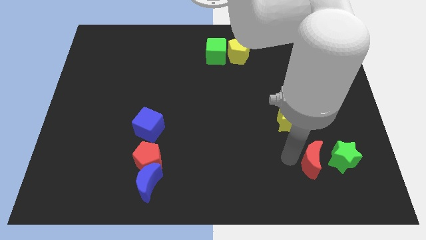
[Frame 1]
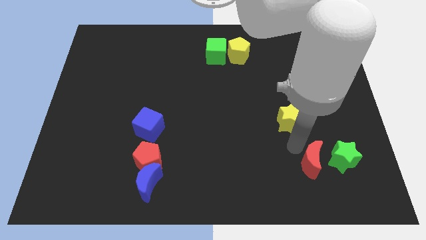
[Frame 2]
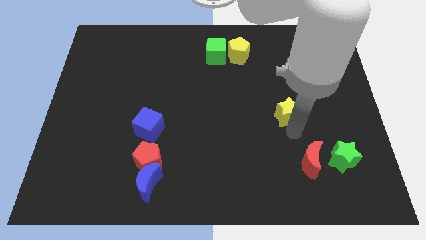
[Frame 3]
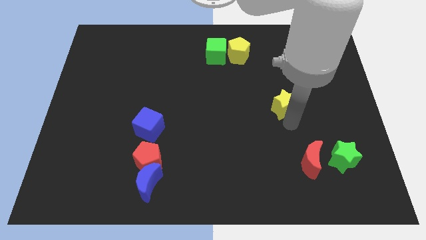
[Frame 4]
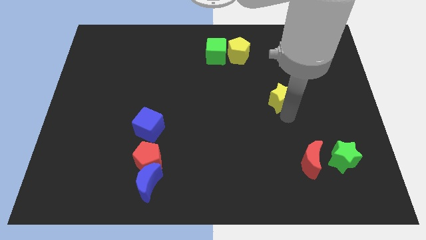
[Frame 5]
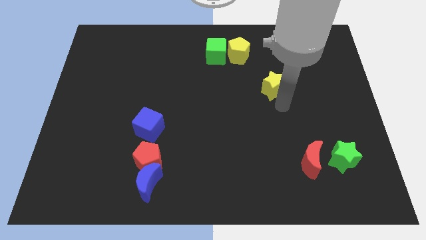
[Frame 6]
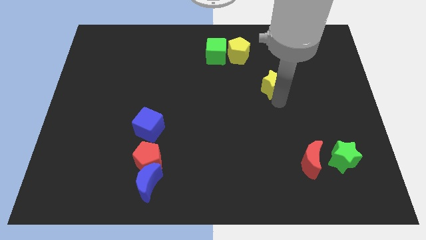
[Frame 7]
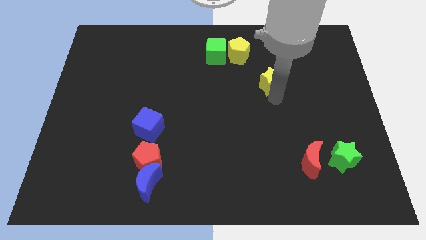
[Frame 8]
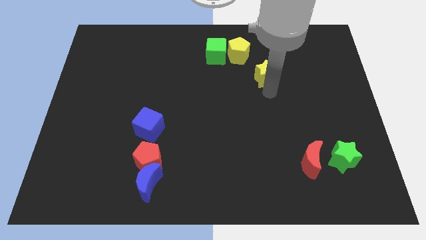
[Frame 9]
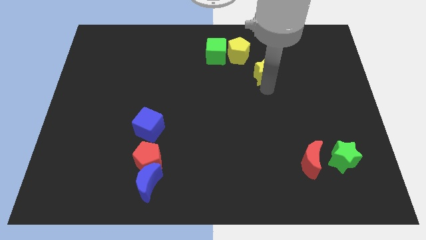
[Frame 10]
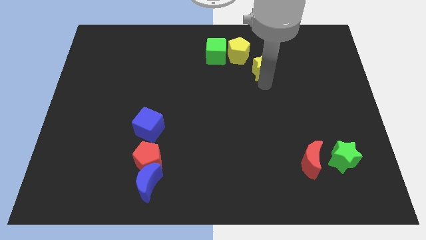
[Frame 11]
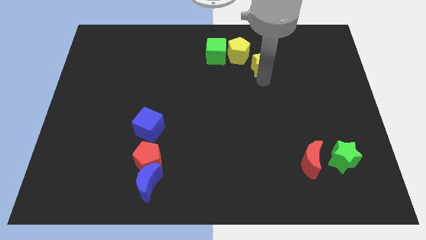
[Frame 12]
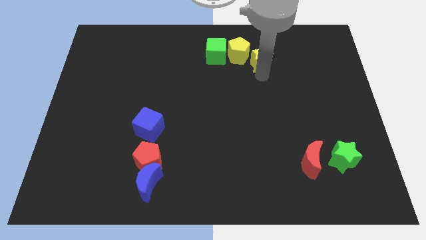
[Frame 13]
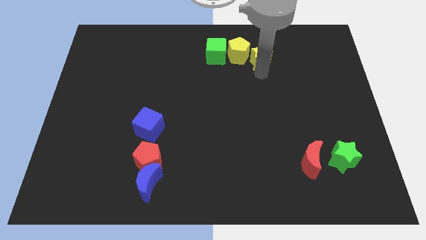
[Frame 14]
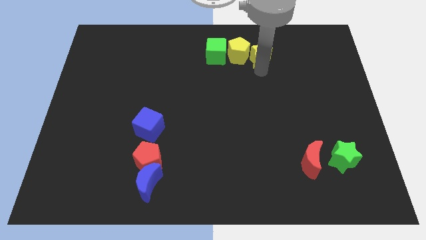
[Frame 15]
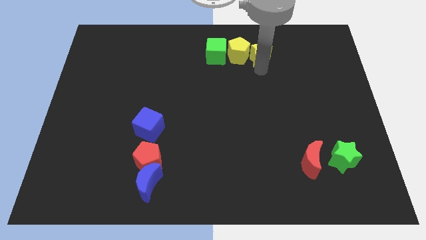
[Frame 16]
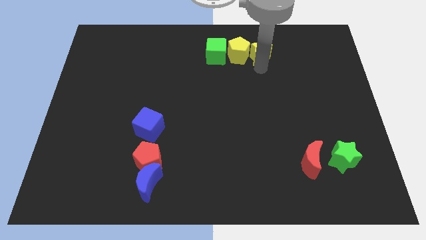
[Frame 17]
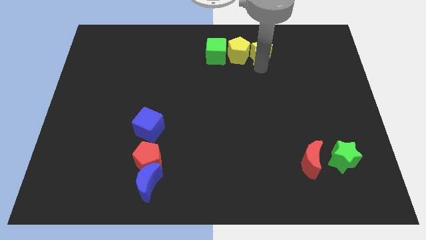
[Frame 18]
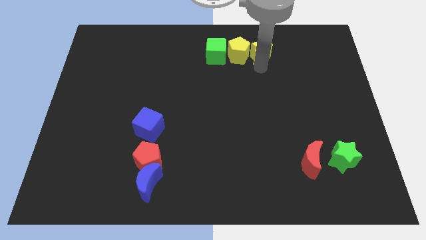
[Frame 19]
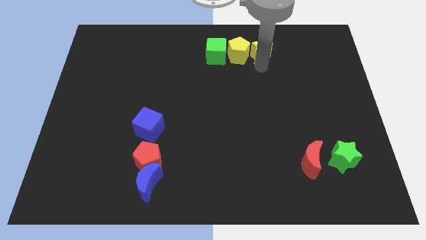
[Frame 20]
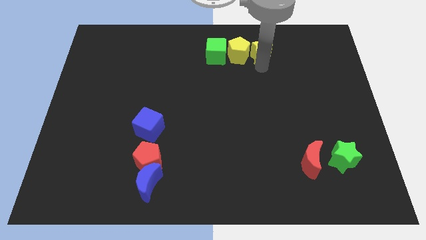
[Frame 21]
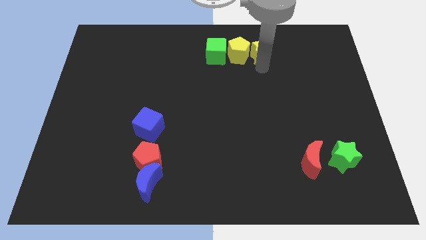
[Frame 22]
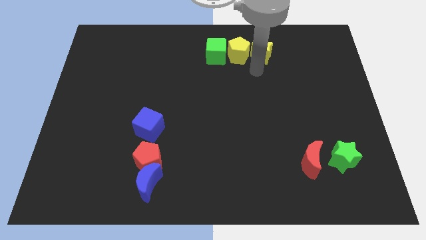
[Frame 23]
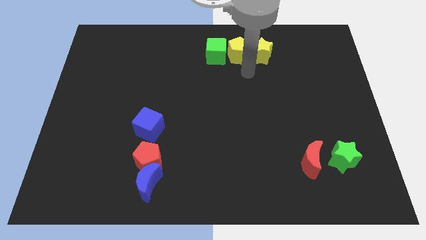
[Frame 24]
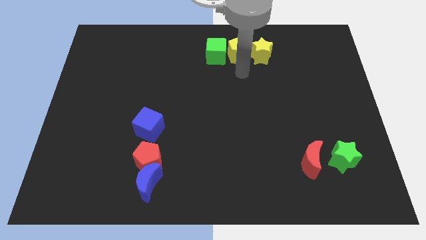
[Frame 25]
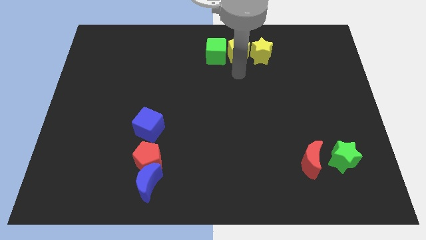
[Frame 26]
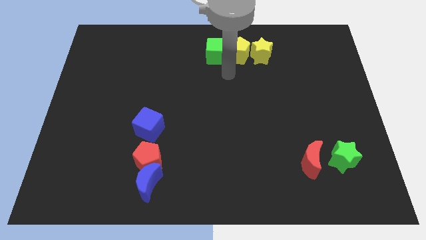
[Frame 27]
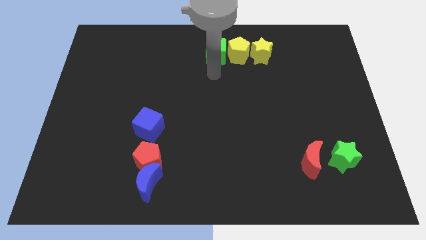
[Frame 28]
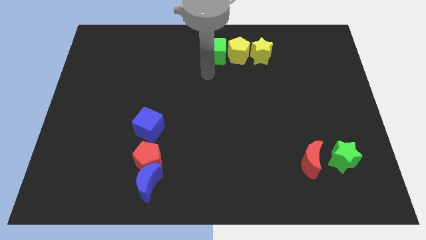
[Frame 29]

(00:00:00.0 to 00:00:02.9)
move yellow star right of the yellow pentagon

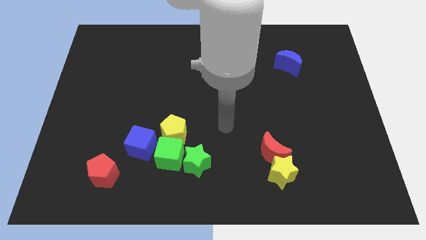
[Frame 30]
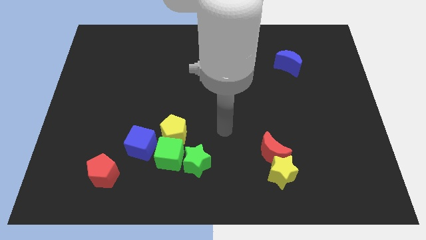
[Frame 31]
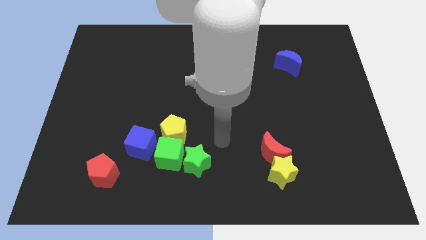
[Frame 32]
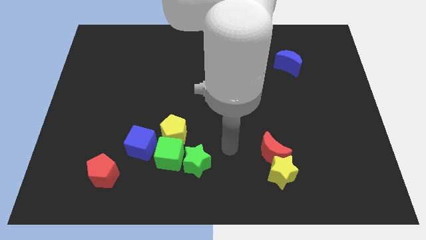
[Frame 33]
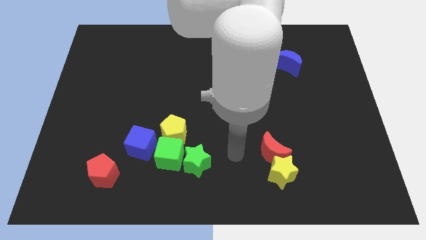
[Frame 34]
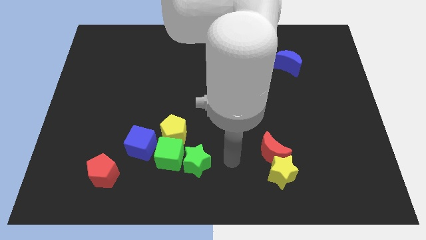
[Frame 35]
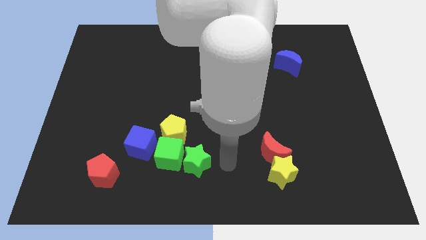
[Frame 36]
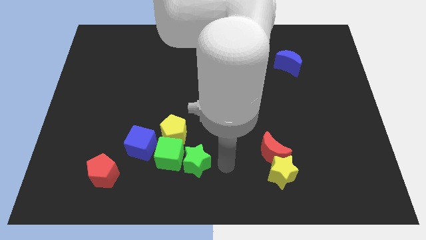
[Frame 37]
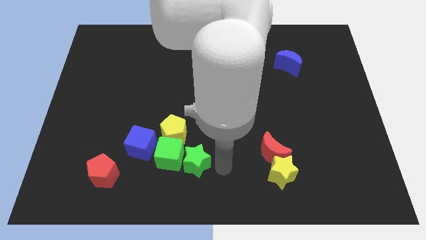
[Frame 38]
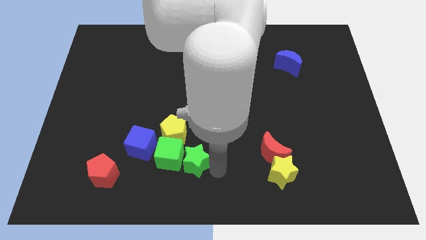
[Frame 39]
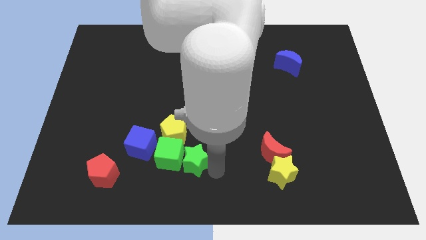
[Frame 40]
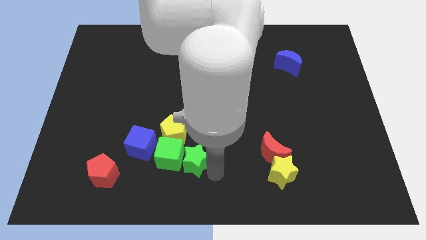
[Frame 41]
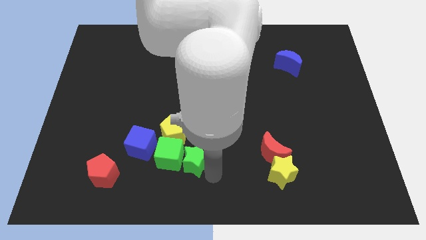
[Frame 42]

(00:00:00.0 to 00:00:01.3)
touch the green star

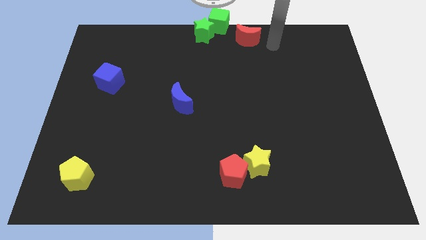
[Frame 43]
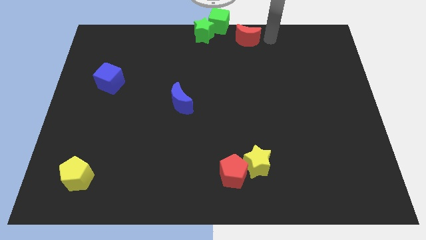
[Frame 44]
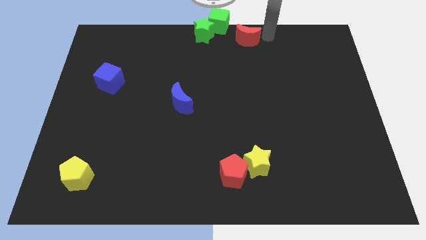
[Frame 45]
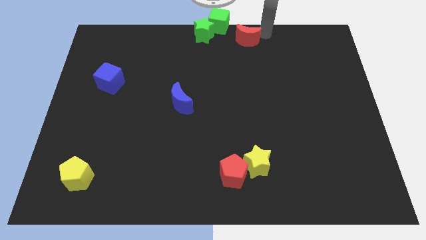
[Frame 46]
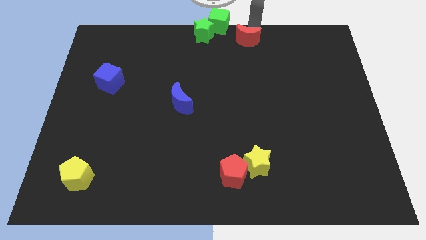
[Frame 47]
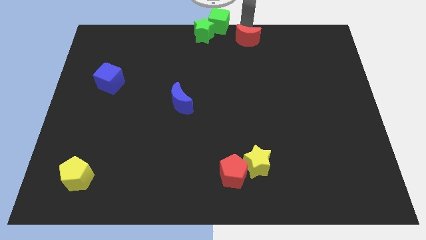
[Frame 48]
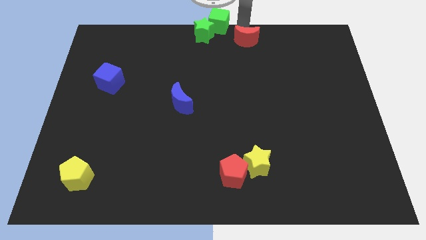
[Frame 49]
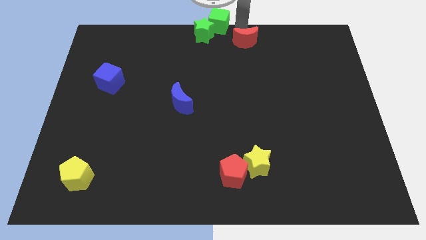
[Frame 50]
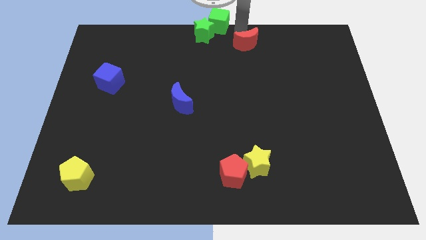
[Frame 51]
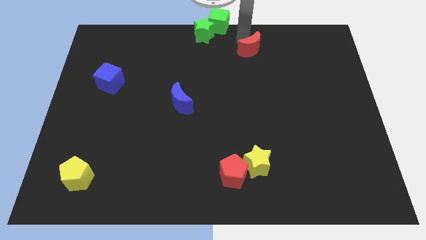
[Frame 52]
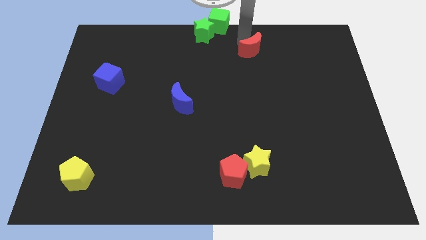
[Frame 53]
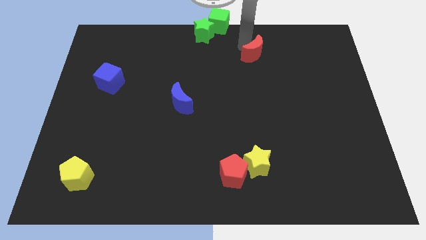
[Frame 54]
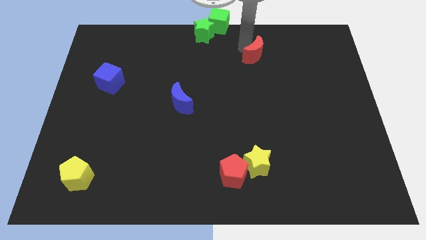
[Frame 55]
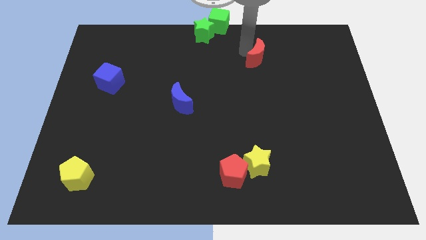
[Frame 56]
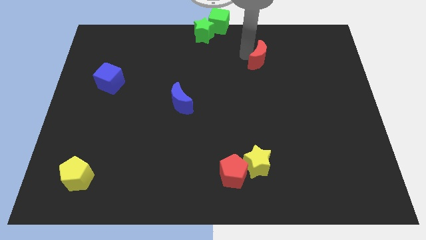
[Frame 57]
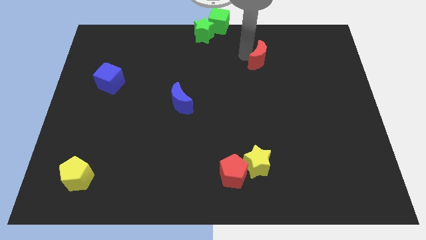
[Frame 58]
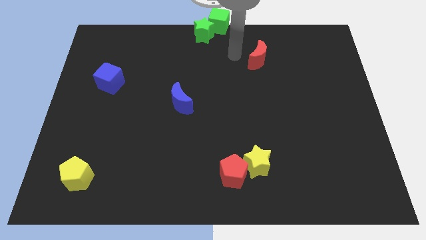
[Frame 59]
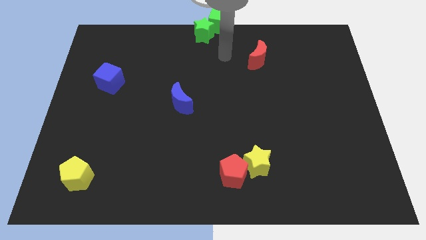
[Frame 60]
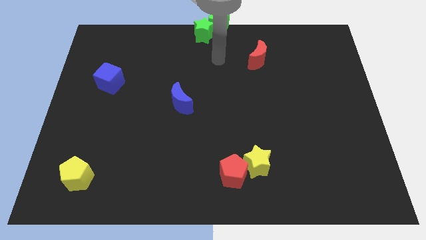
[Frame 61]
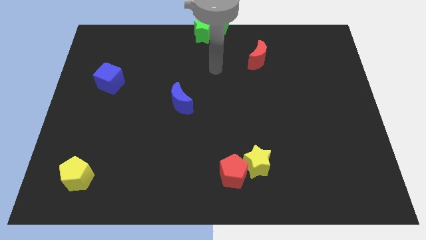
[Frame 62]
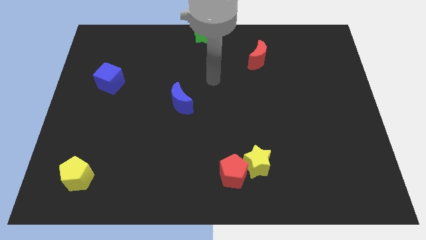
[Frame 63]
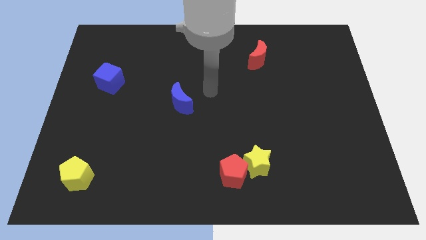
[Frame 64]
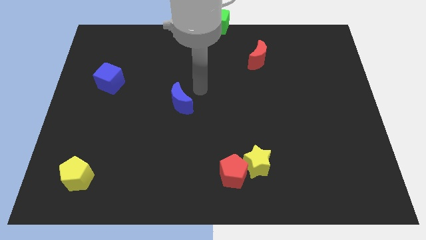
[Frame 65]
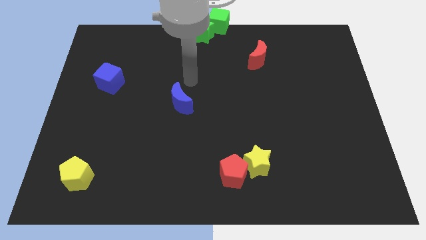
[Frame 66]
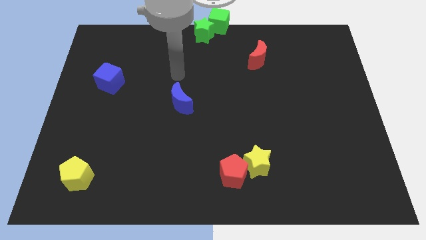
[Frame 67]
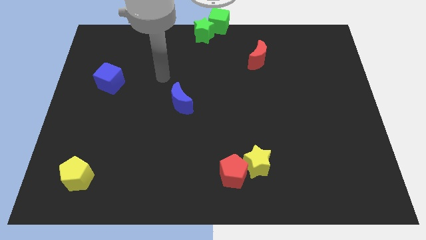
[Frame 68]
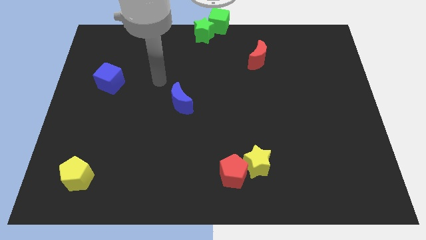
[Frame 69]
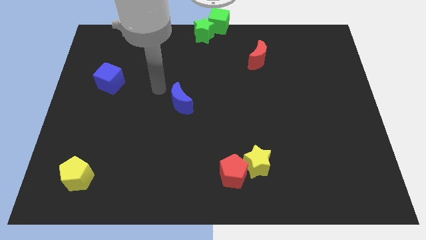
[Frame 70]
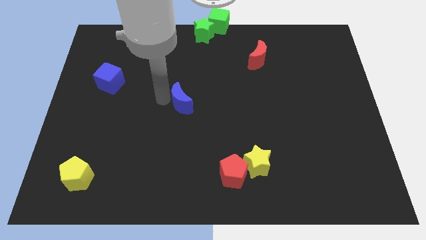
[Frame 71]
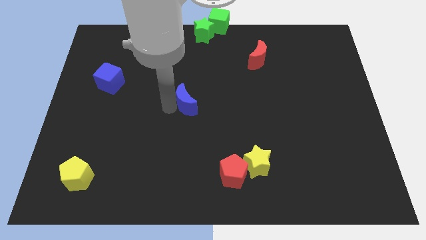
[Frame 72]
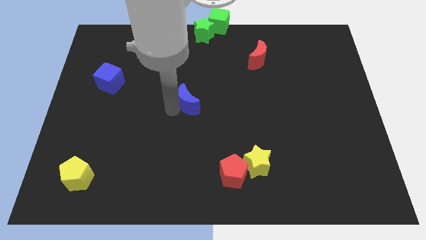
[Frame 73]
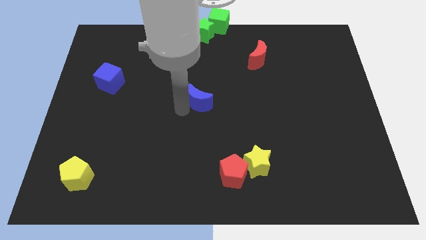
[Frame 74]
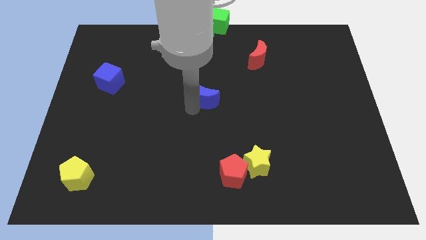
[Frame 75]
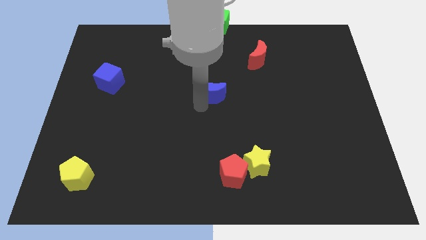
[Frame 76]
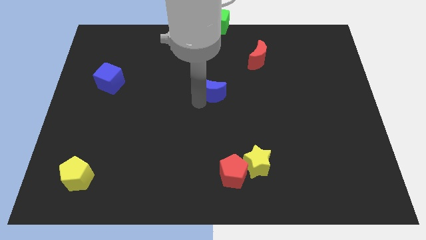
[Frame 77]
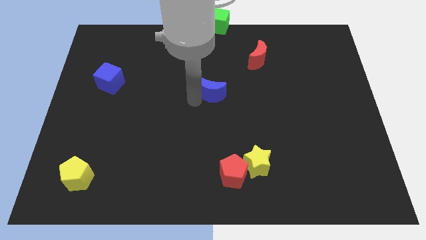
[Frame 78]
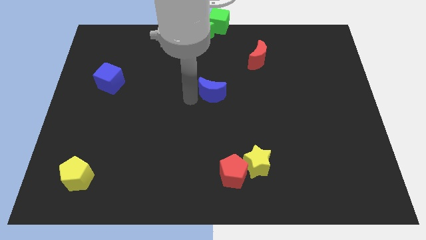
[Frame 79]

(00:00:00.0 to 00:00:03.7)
place the blue moon at the center of the board

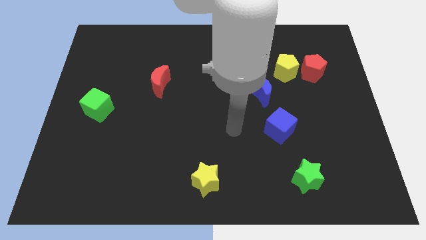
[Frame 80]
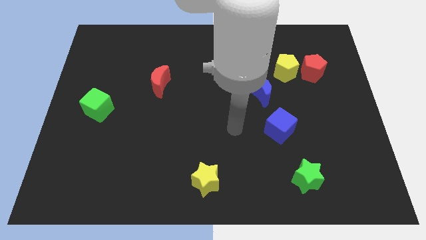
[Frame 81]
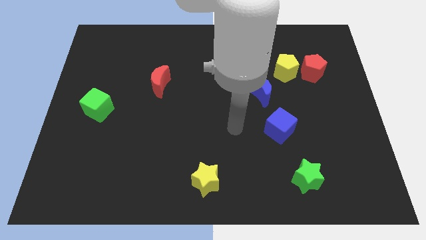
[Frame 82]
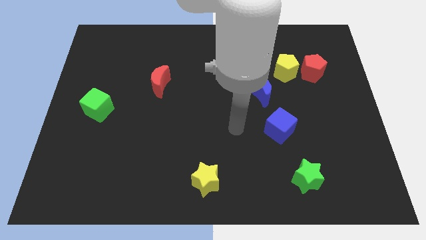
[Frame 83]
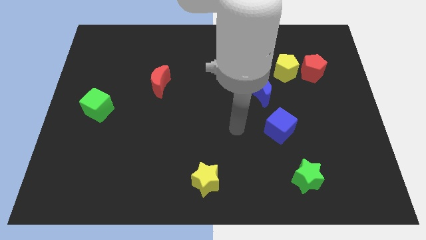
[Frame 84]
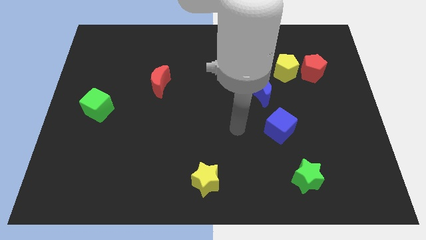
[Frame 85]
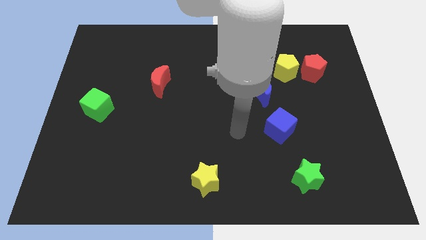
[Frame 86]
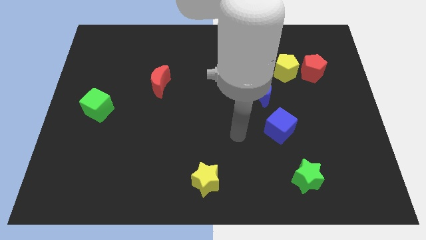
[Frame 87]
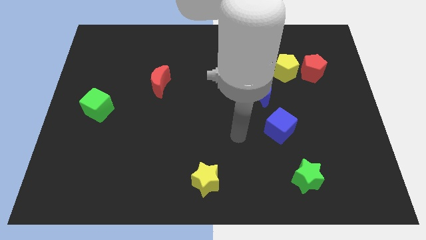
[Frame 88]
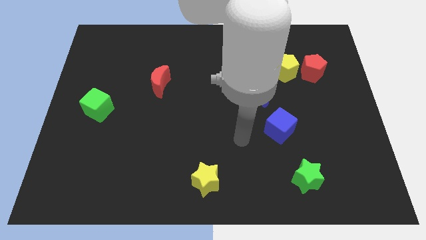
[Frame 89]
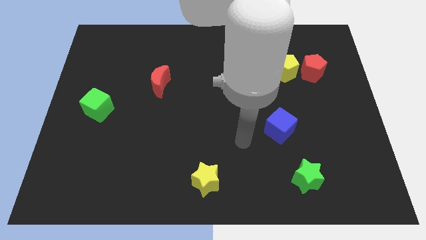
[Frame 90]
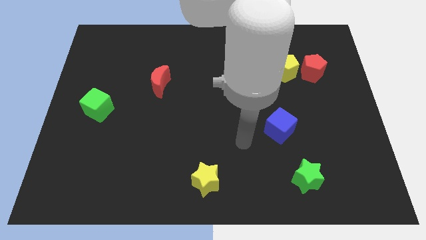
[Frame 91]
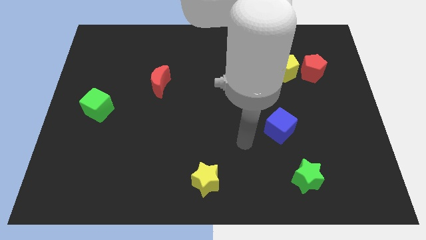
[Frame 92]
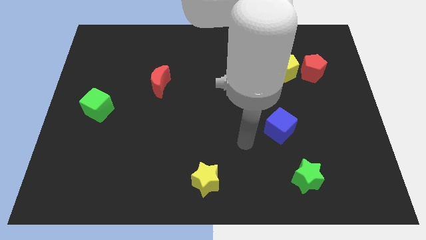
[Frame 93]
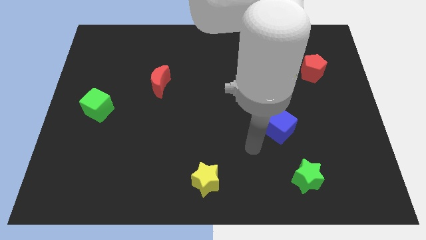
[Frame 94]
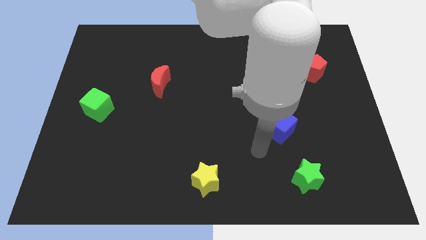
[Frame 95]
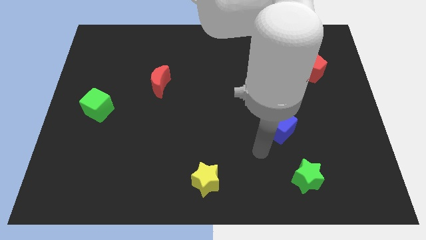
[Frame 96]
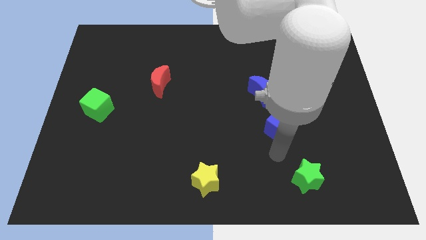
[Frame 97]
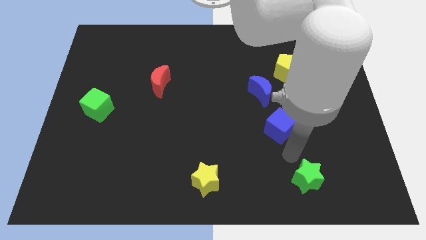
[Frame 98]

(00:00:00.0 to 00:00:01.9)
put your arm vertically below the blue cube
